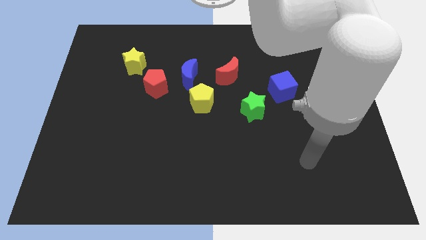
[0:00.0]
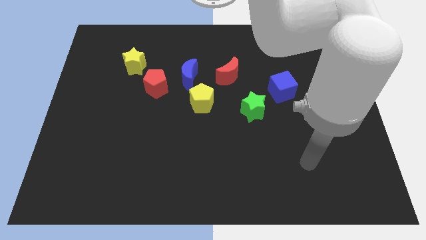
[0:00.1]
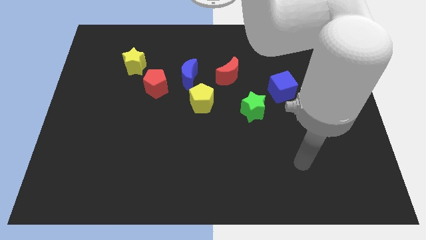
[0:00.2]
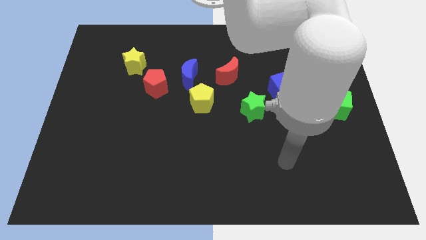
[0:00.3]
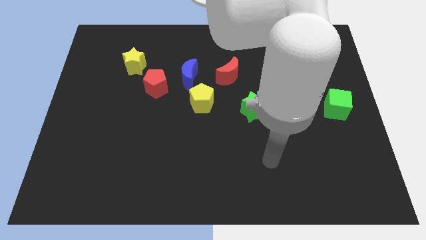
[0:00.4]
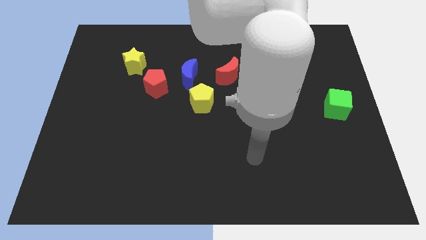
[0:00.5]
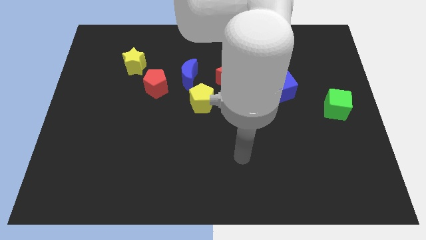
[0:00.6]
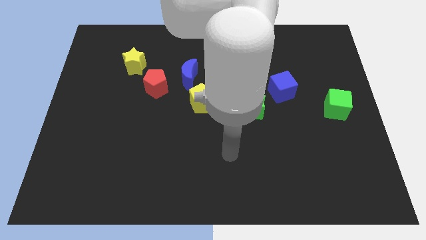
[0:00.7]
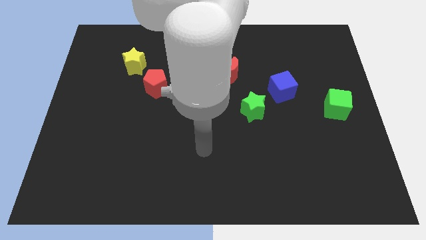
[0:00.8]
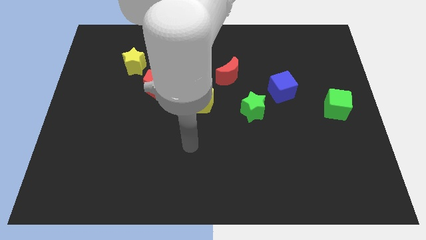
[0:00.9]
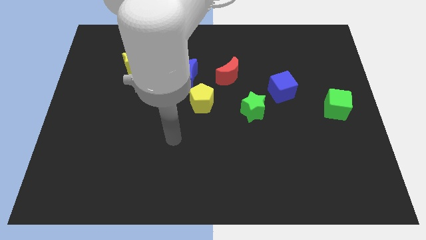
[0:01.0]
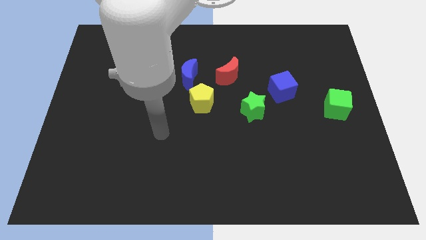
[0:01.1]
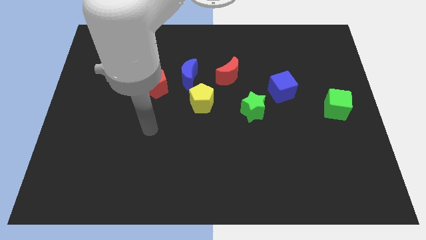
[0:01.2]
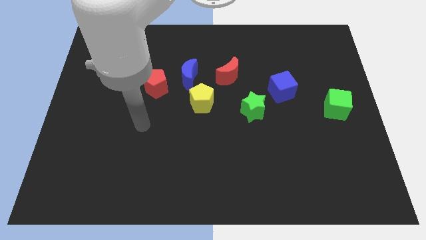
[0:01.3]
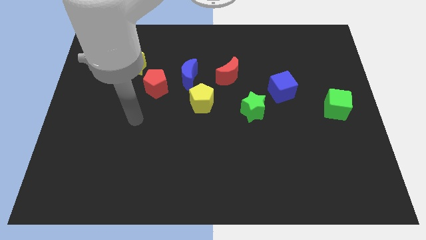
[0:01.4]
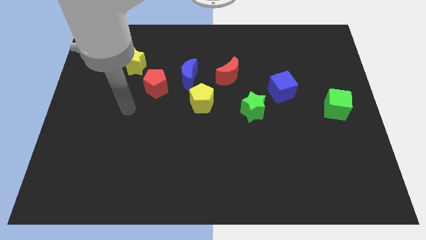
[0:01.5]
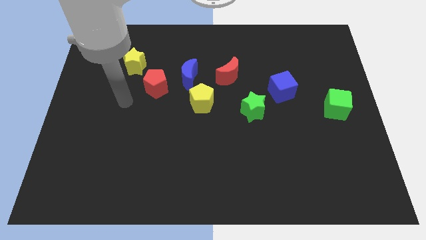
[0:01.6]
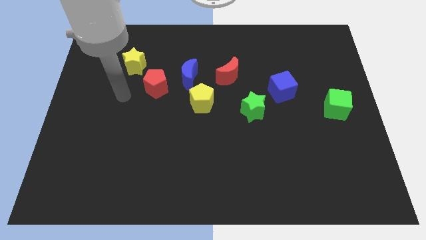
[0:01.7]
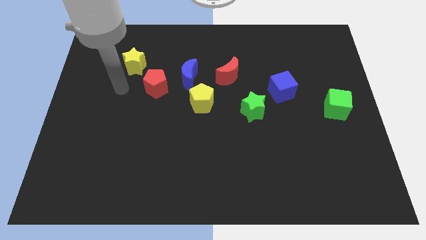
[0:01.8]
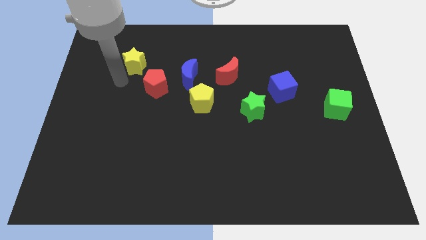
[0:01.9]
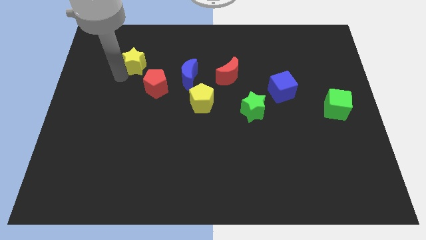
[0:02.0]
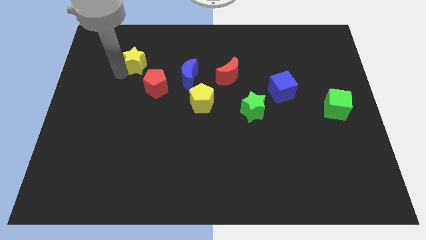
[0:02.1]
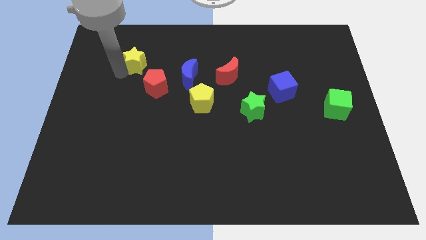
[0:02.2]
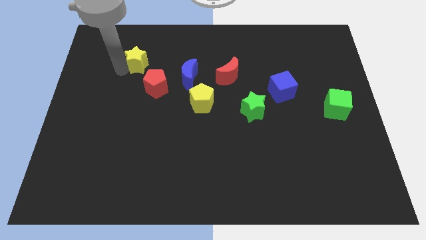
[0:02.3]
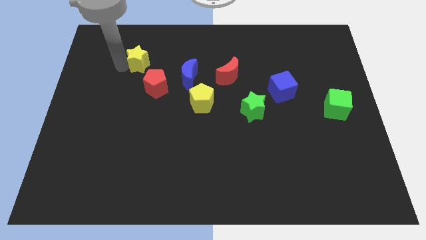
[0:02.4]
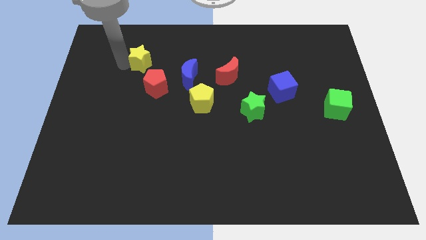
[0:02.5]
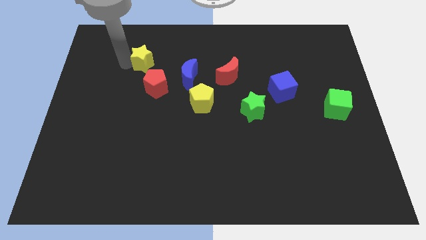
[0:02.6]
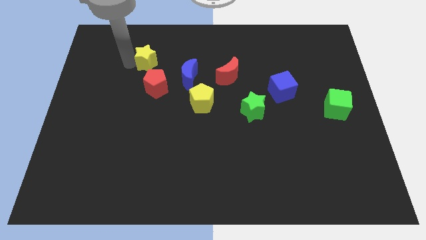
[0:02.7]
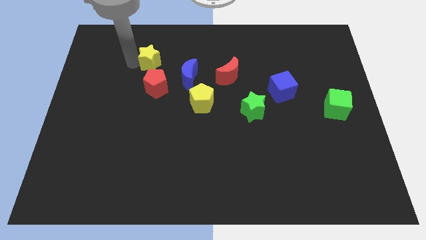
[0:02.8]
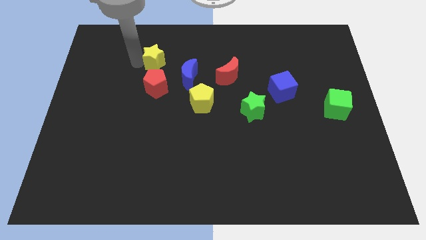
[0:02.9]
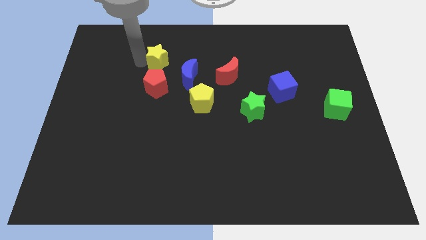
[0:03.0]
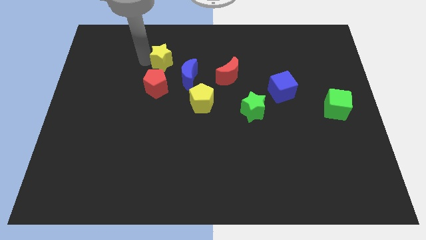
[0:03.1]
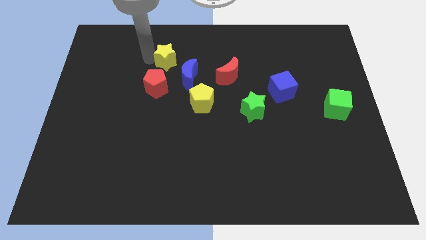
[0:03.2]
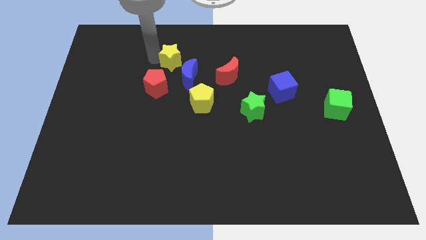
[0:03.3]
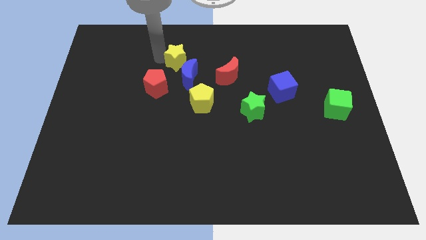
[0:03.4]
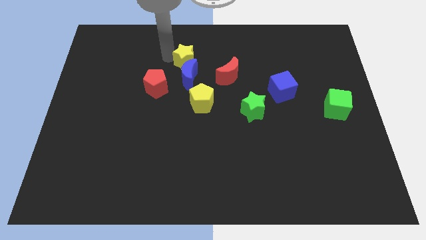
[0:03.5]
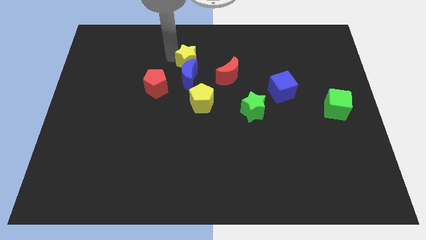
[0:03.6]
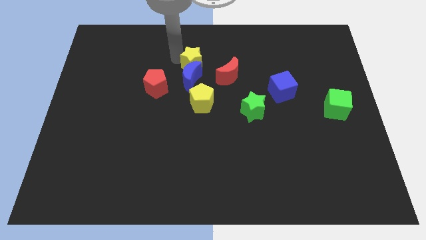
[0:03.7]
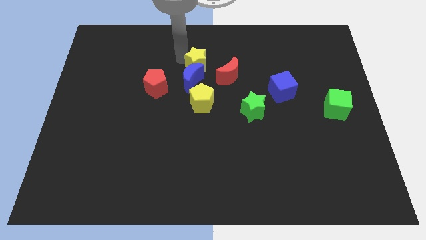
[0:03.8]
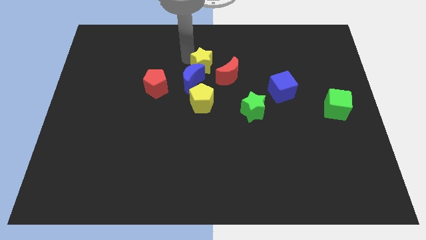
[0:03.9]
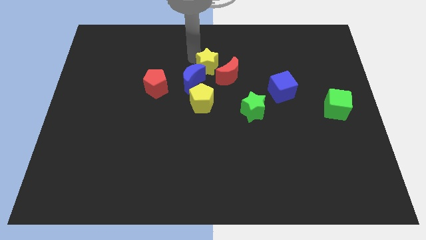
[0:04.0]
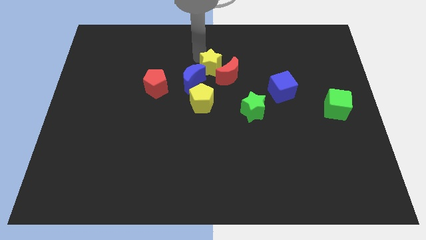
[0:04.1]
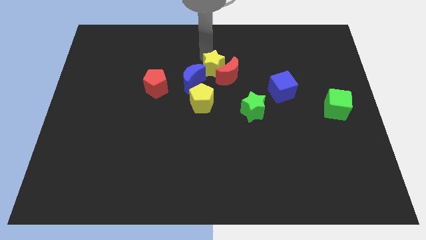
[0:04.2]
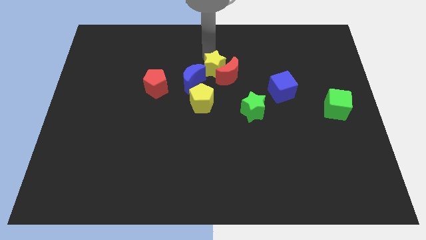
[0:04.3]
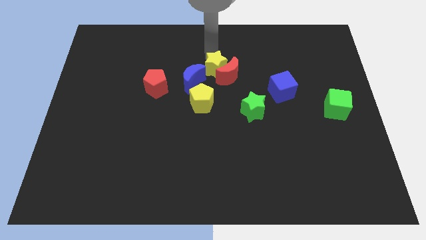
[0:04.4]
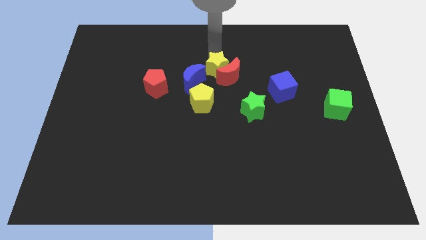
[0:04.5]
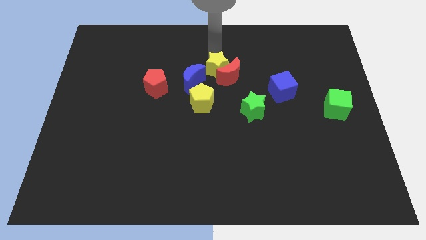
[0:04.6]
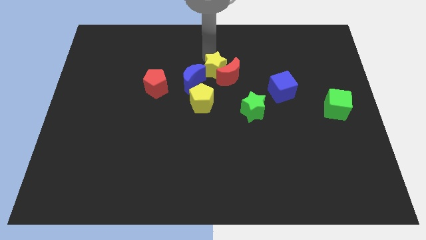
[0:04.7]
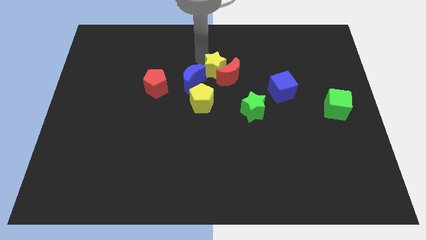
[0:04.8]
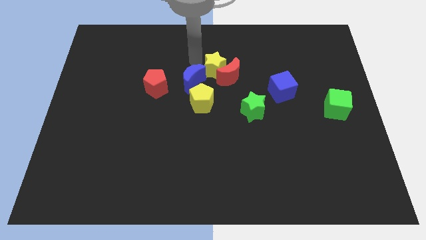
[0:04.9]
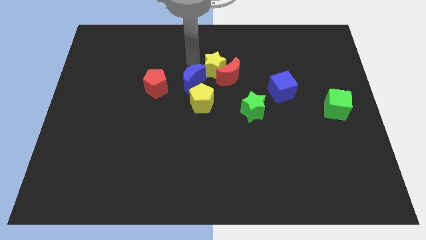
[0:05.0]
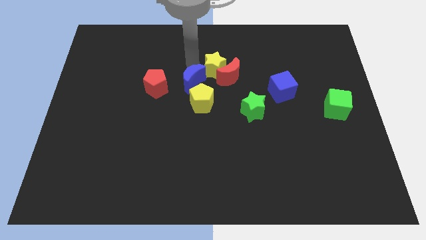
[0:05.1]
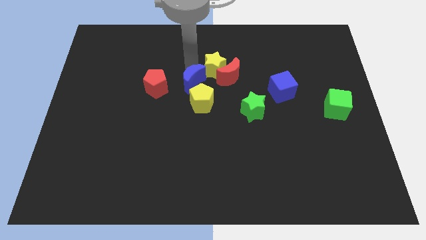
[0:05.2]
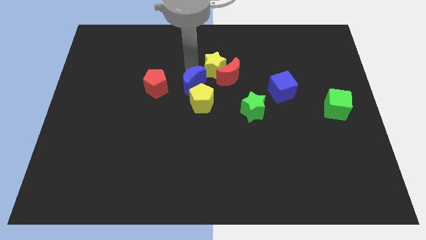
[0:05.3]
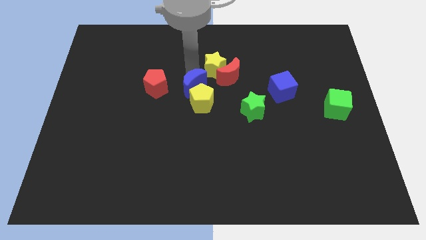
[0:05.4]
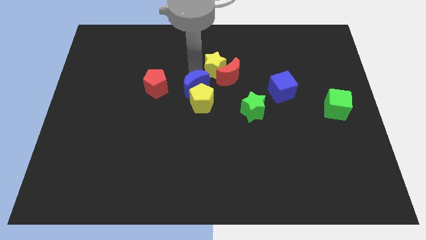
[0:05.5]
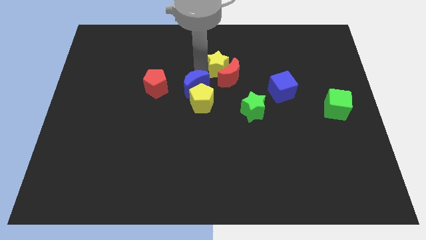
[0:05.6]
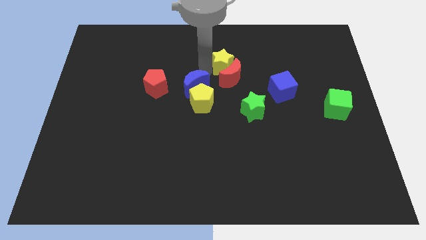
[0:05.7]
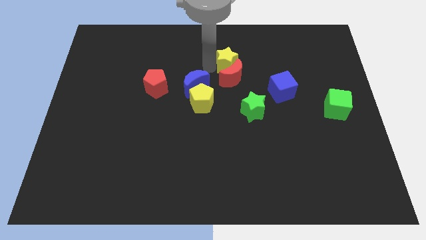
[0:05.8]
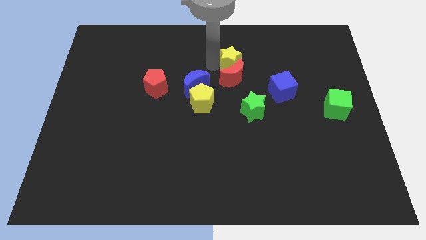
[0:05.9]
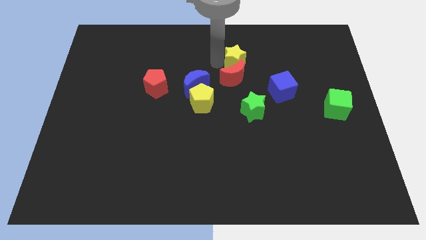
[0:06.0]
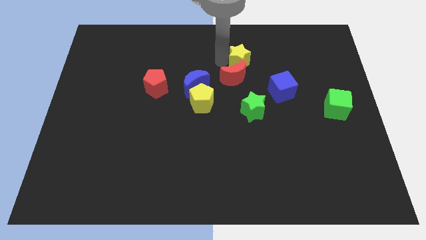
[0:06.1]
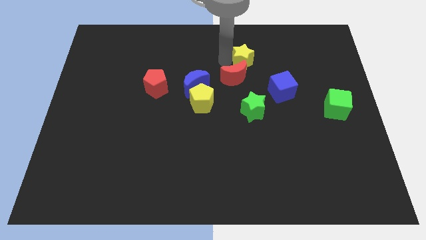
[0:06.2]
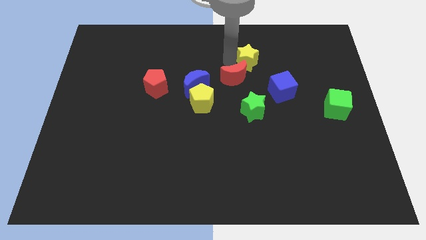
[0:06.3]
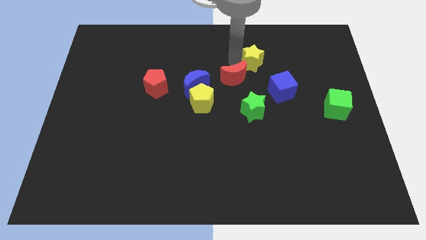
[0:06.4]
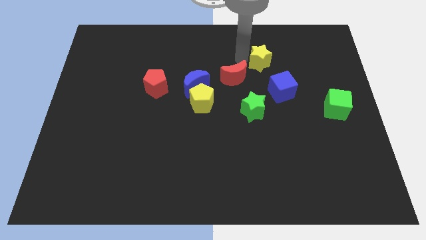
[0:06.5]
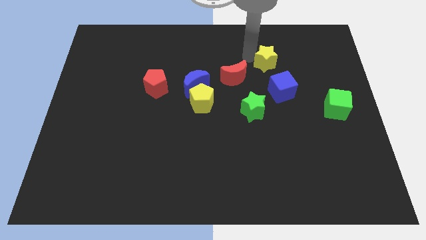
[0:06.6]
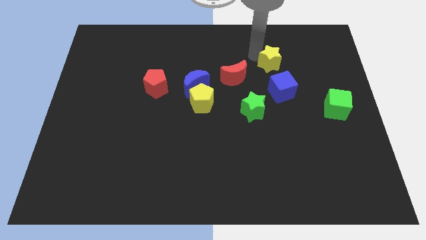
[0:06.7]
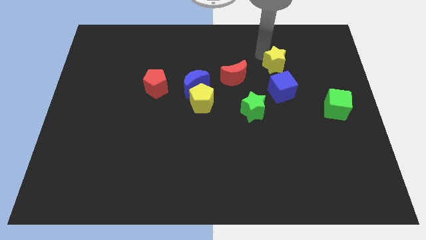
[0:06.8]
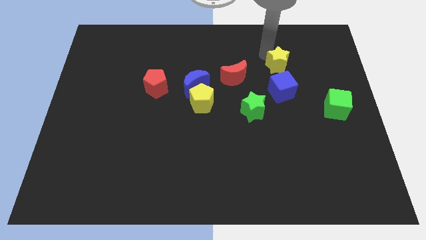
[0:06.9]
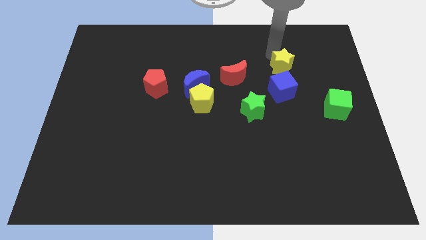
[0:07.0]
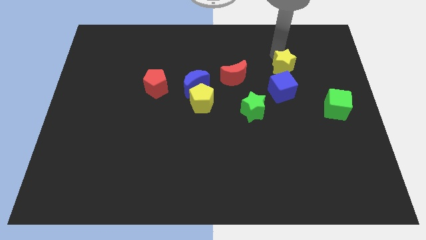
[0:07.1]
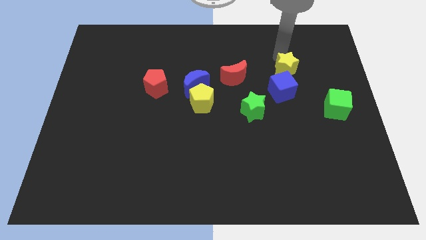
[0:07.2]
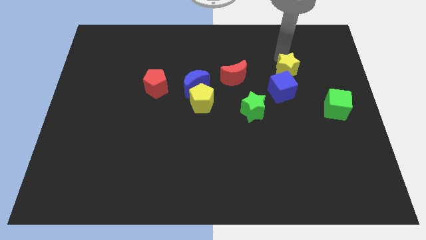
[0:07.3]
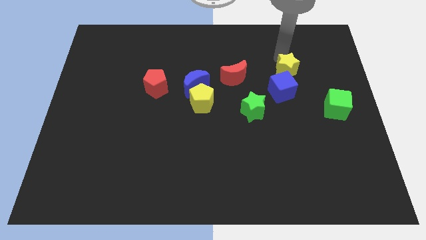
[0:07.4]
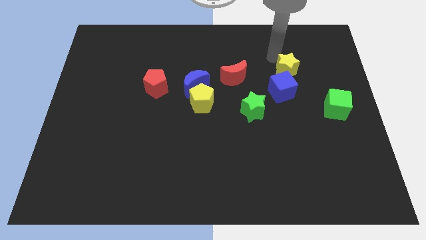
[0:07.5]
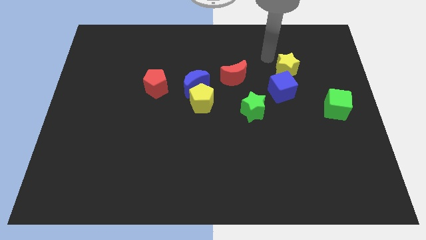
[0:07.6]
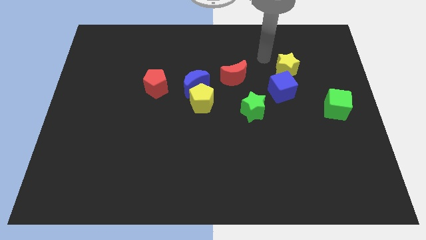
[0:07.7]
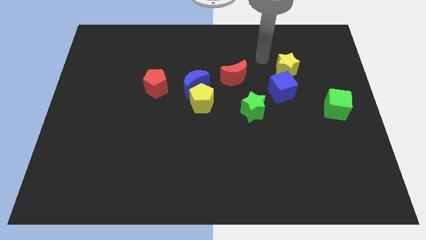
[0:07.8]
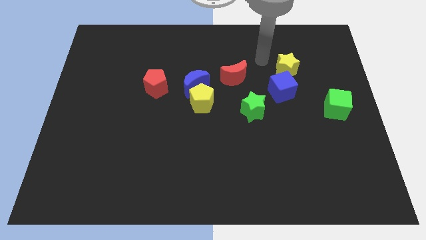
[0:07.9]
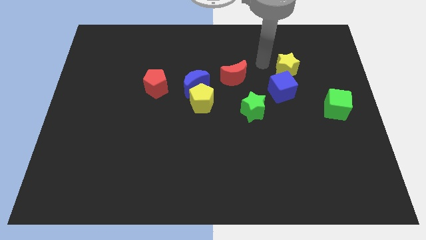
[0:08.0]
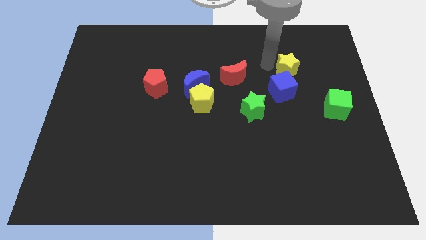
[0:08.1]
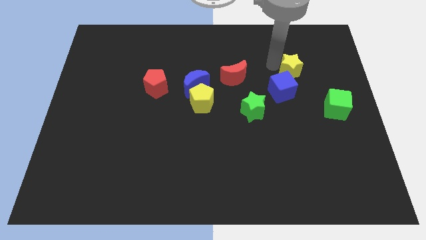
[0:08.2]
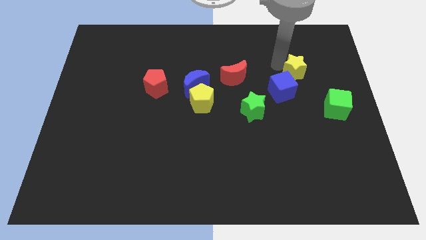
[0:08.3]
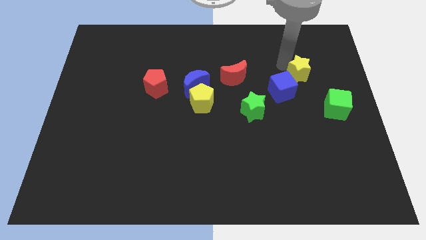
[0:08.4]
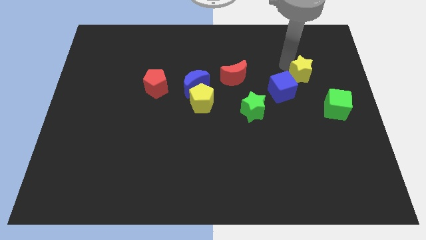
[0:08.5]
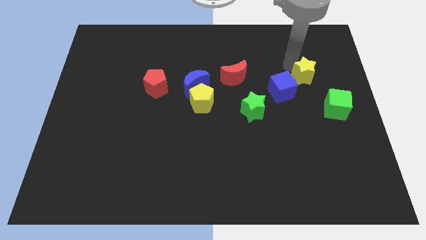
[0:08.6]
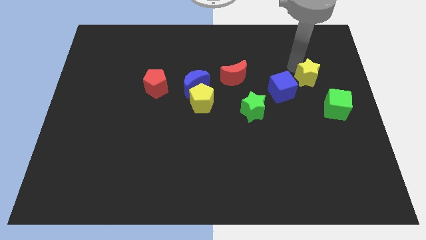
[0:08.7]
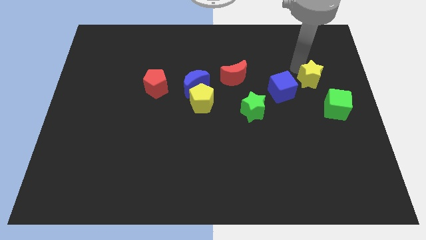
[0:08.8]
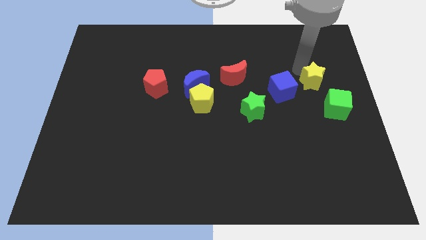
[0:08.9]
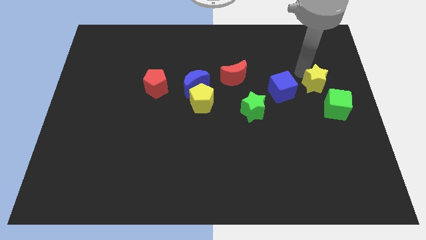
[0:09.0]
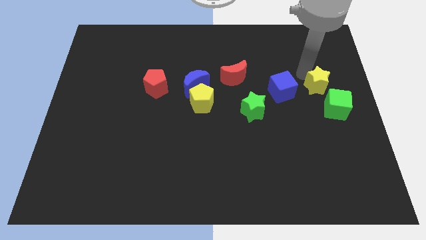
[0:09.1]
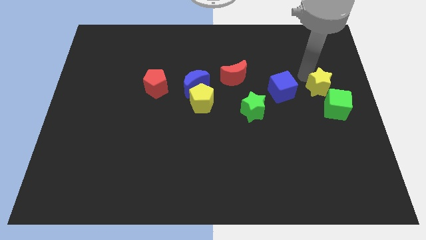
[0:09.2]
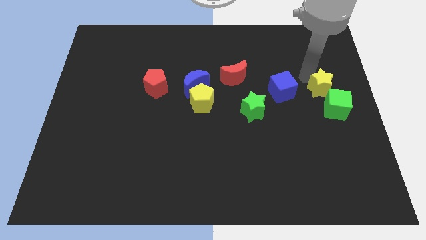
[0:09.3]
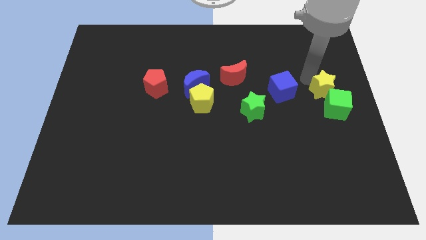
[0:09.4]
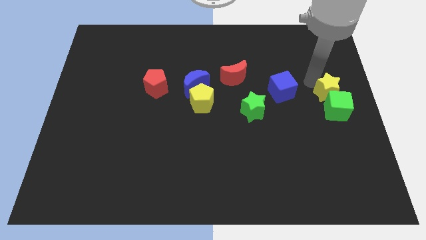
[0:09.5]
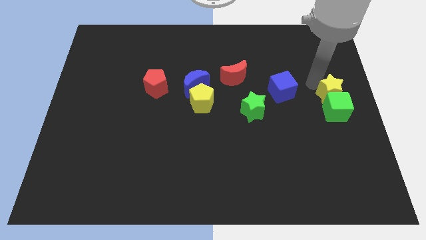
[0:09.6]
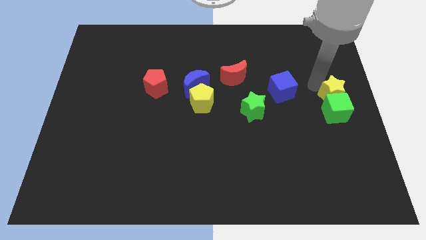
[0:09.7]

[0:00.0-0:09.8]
put the yellow star to the green cube
